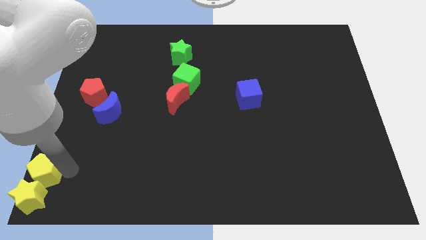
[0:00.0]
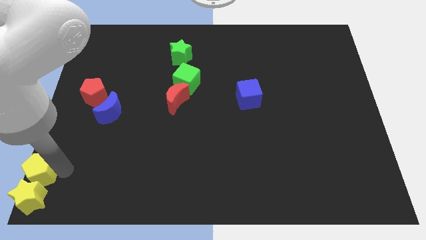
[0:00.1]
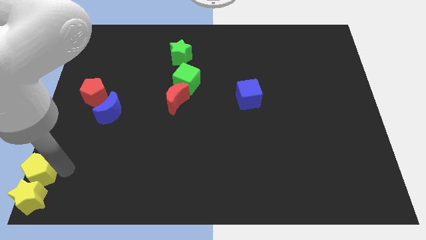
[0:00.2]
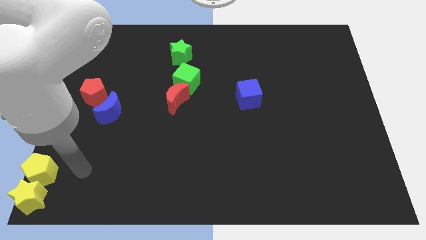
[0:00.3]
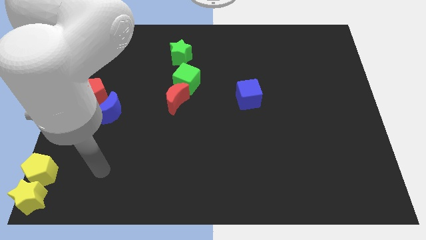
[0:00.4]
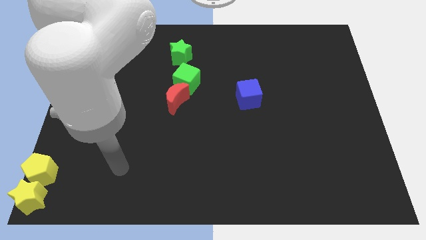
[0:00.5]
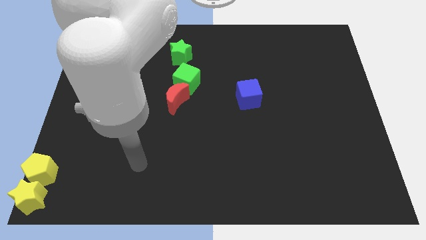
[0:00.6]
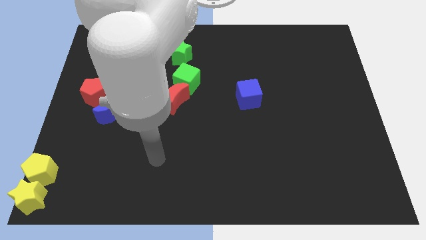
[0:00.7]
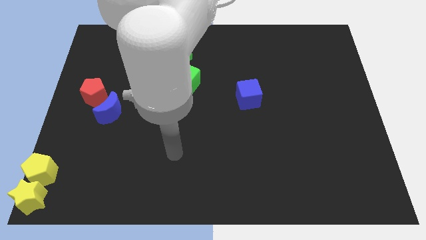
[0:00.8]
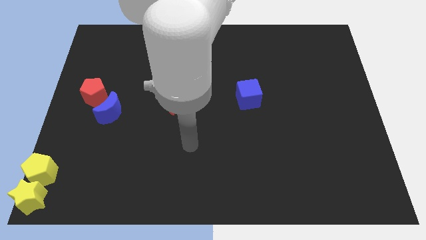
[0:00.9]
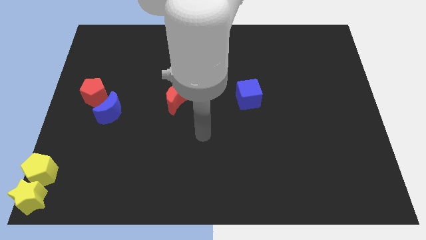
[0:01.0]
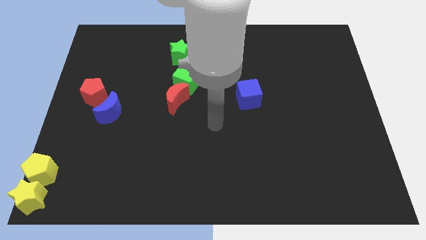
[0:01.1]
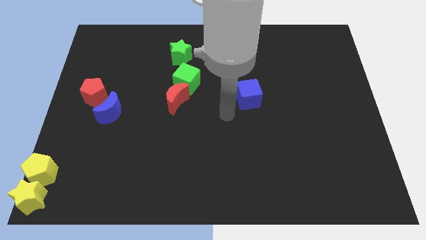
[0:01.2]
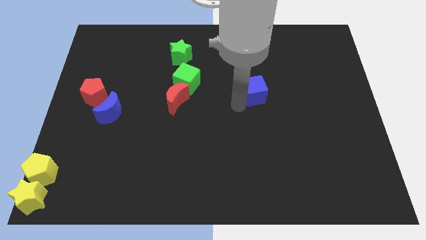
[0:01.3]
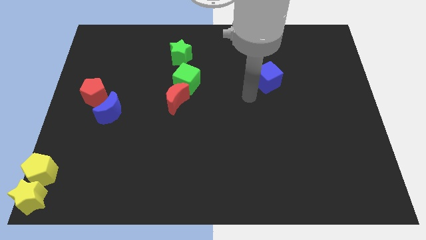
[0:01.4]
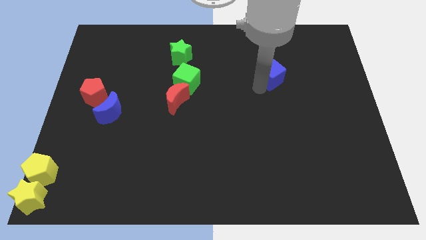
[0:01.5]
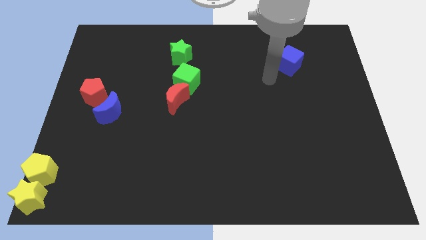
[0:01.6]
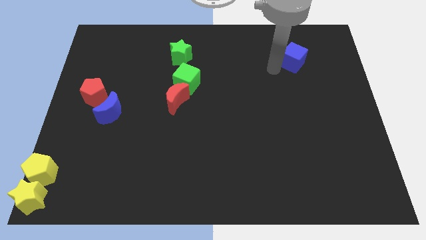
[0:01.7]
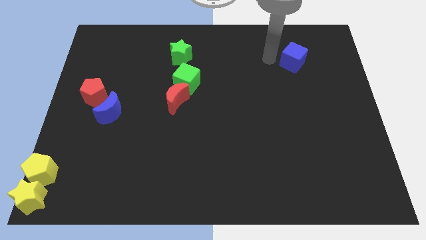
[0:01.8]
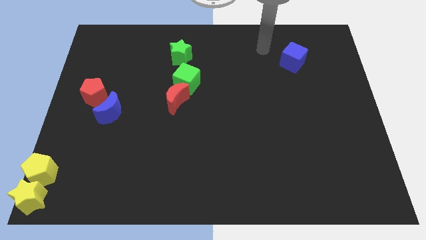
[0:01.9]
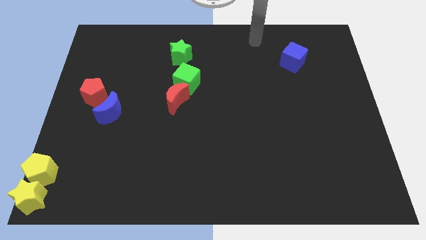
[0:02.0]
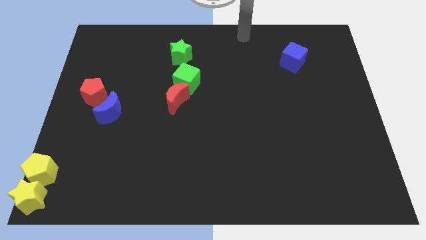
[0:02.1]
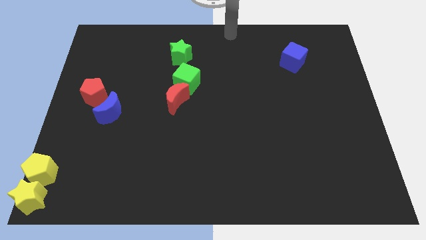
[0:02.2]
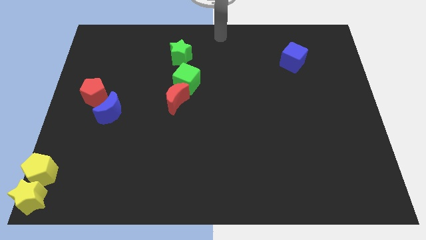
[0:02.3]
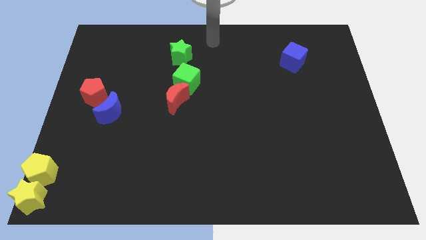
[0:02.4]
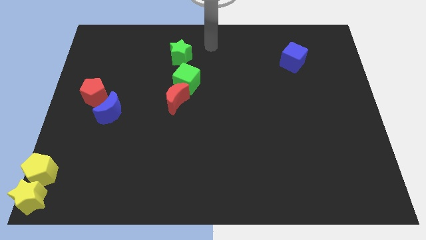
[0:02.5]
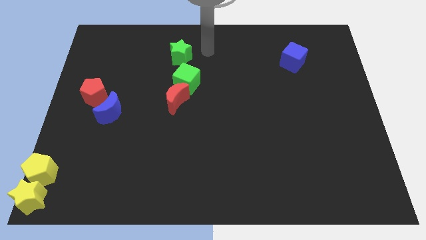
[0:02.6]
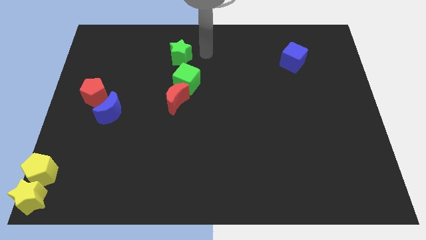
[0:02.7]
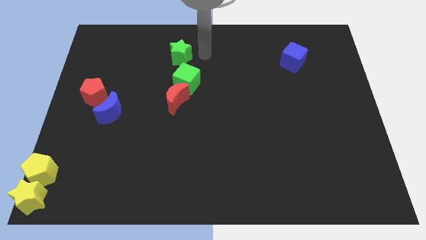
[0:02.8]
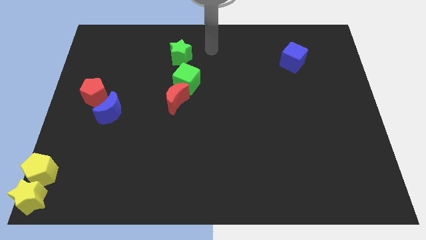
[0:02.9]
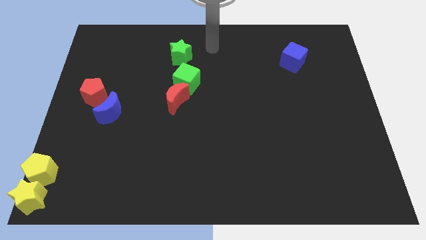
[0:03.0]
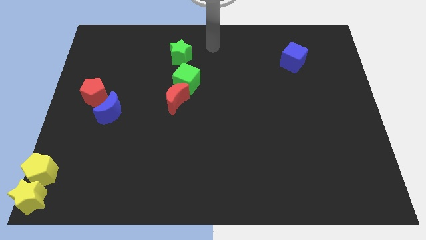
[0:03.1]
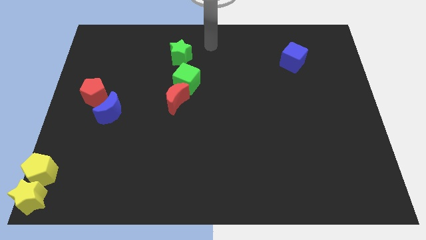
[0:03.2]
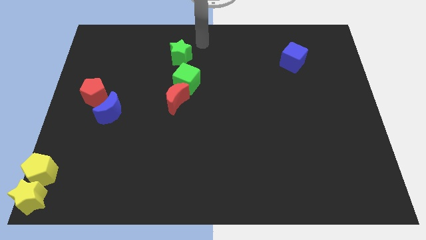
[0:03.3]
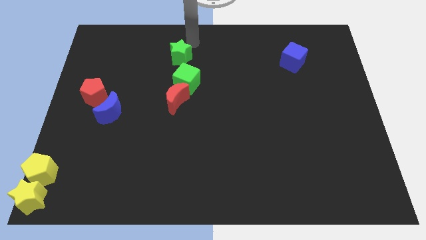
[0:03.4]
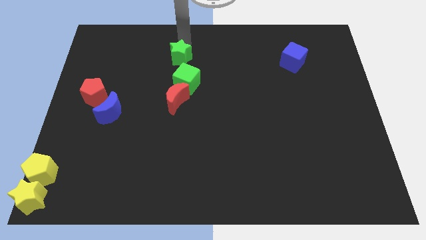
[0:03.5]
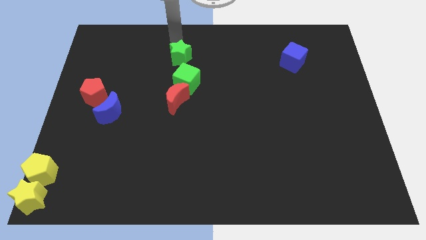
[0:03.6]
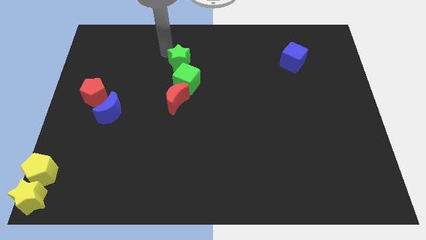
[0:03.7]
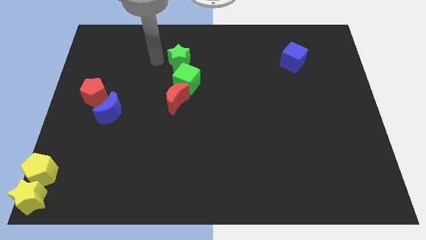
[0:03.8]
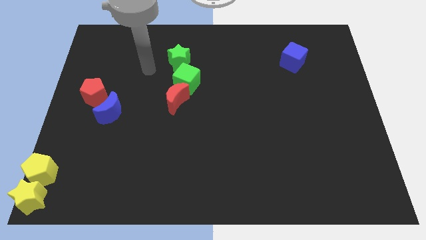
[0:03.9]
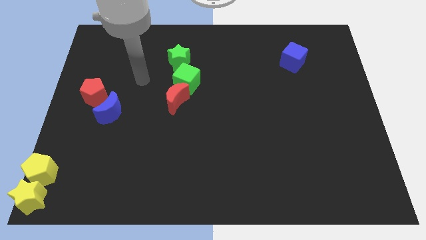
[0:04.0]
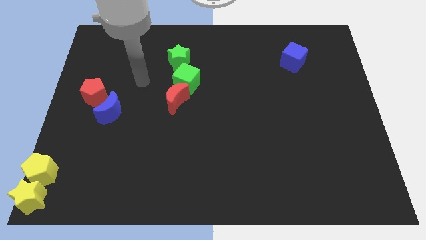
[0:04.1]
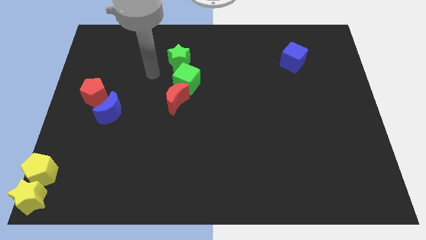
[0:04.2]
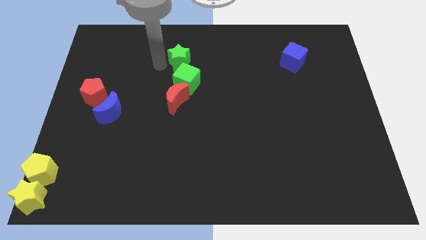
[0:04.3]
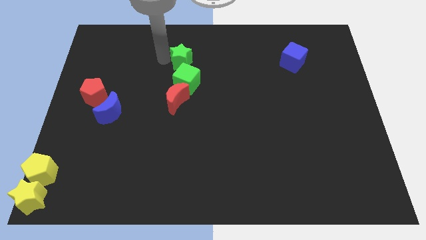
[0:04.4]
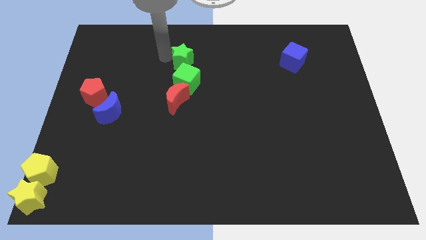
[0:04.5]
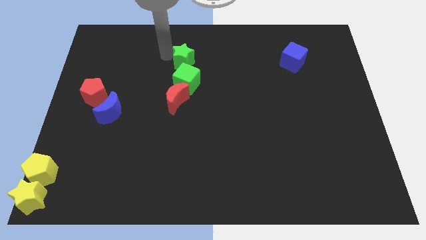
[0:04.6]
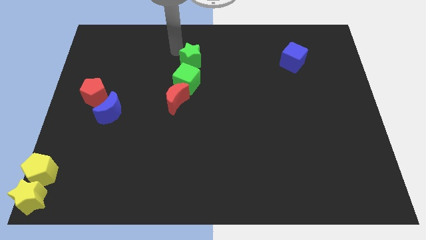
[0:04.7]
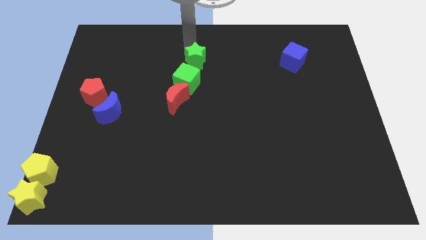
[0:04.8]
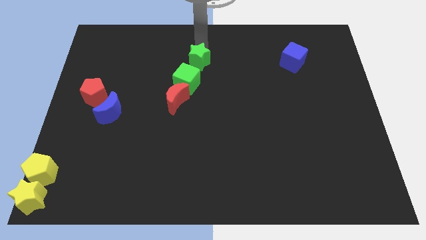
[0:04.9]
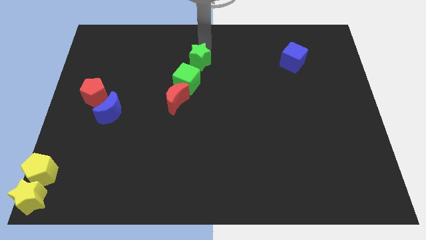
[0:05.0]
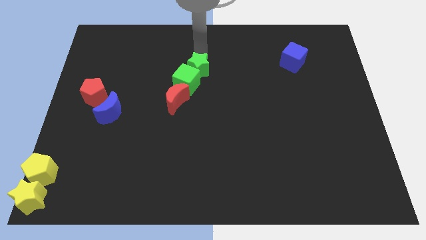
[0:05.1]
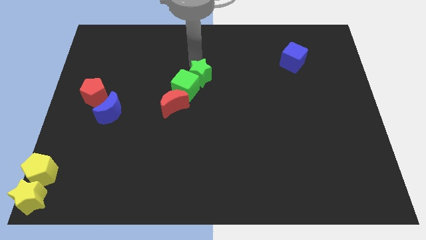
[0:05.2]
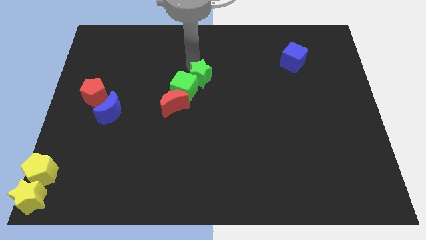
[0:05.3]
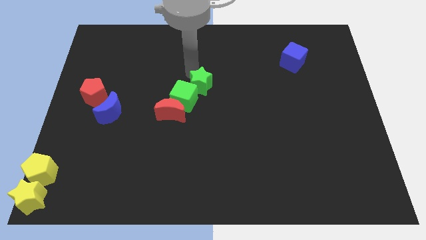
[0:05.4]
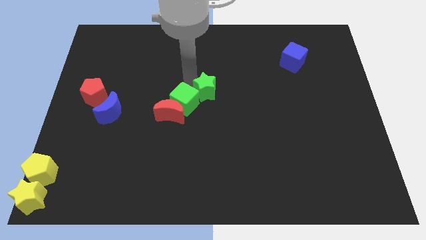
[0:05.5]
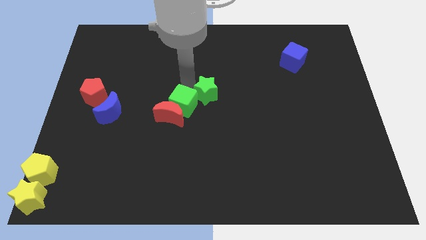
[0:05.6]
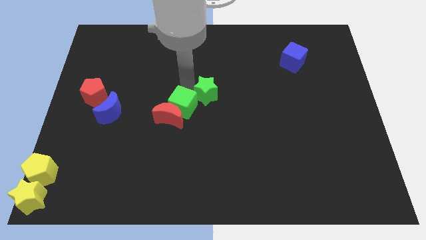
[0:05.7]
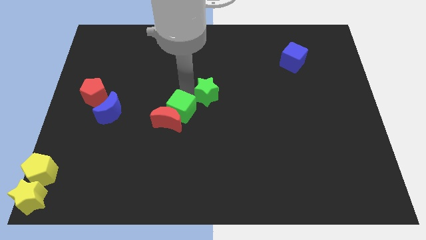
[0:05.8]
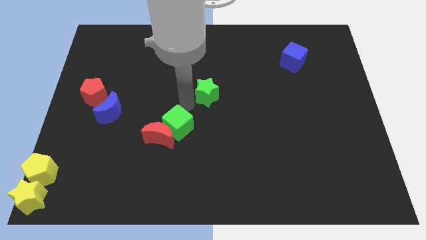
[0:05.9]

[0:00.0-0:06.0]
place your arm in between the green blocks

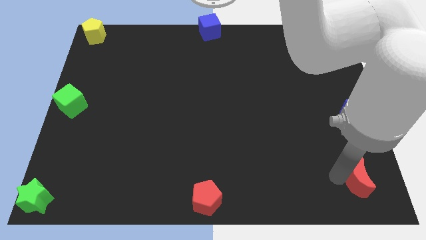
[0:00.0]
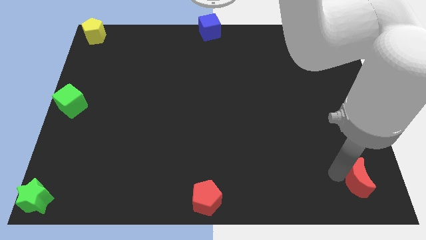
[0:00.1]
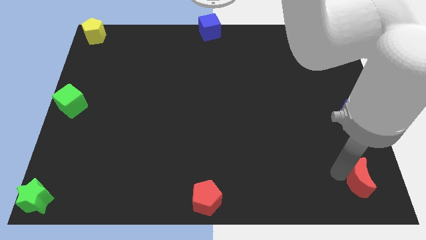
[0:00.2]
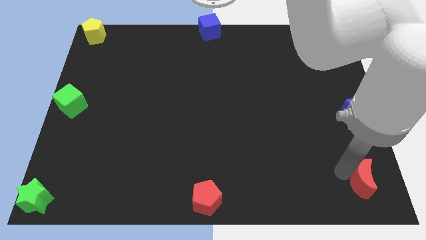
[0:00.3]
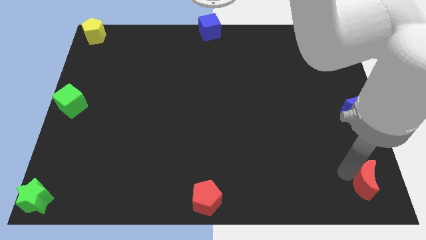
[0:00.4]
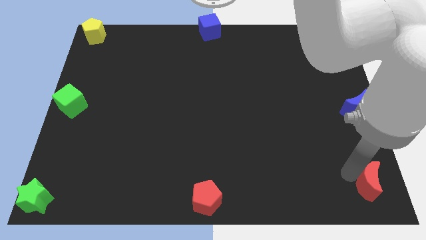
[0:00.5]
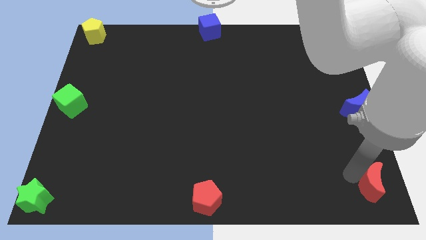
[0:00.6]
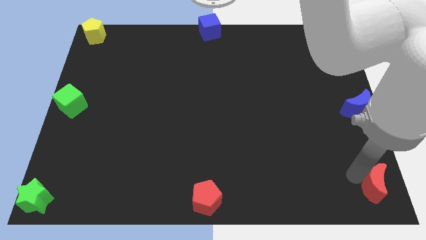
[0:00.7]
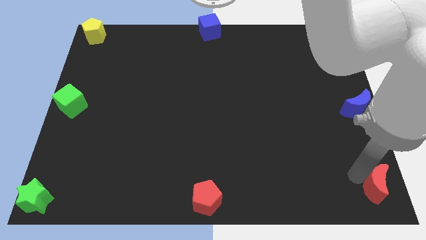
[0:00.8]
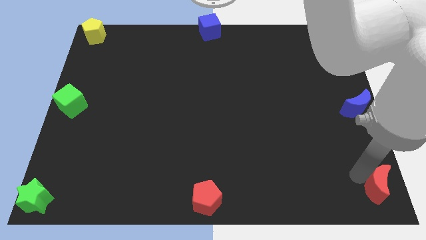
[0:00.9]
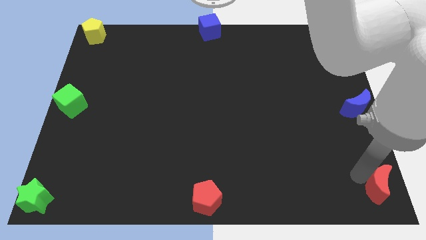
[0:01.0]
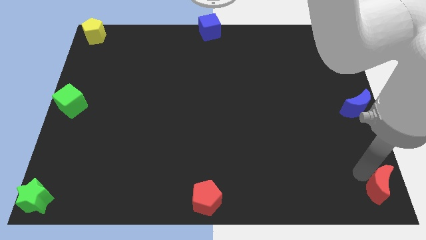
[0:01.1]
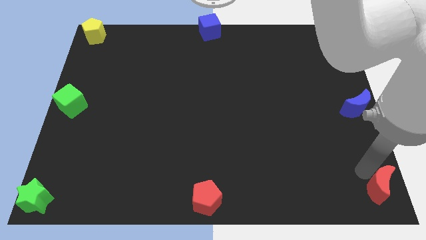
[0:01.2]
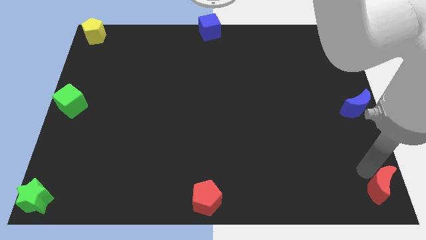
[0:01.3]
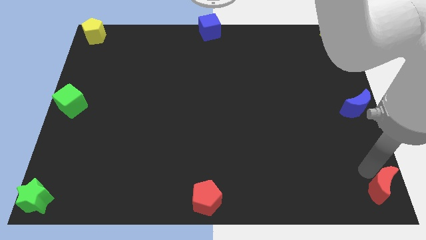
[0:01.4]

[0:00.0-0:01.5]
push the red crescent to the bottom right of the board

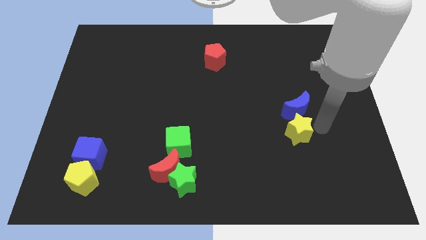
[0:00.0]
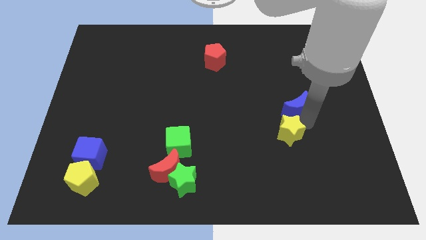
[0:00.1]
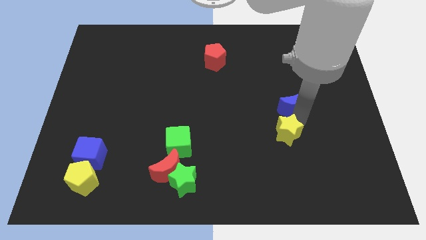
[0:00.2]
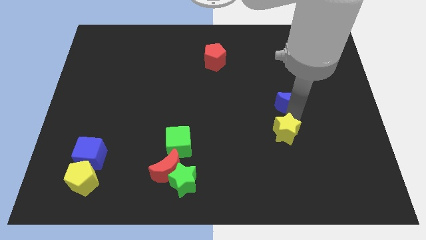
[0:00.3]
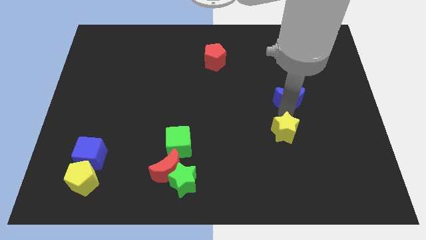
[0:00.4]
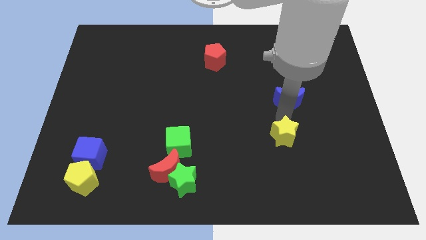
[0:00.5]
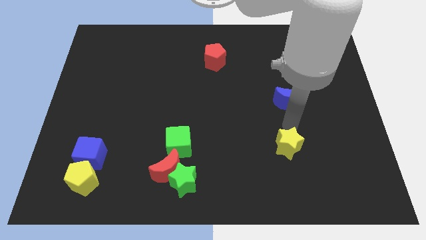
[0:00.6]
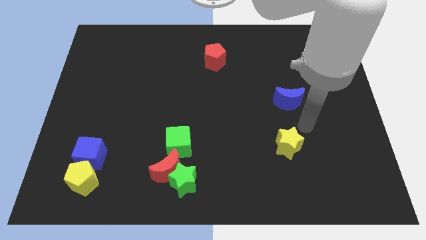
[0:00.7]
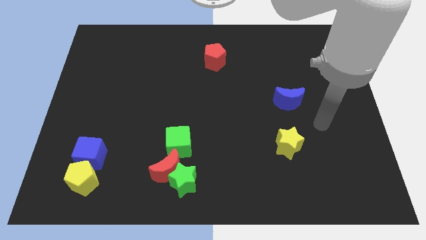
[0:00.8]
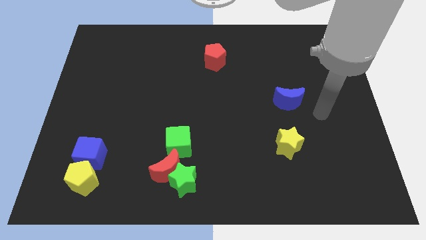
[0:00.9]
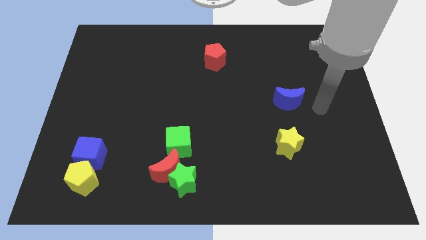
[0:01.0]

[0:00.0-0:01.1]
separate yellow star from blue moon

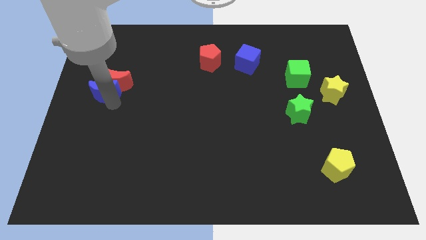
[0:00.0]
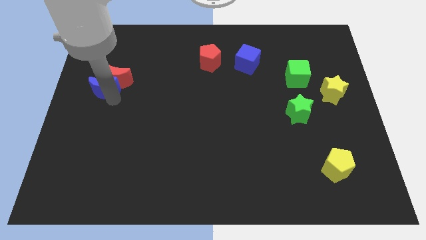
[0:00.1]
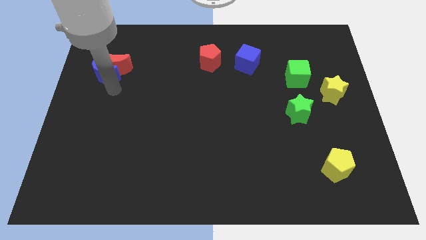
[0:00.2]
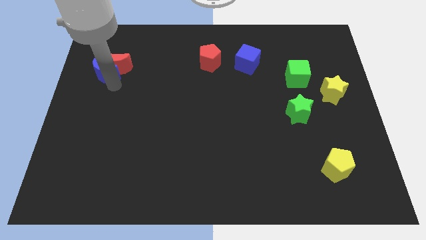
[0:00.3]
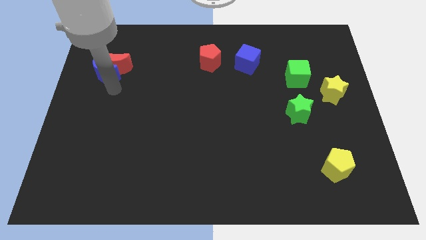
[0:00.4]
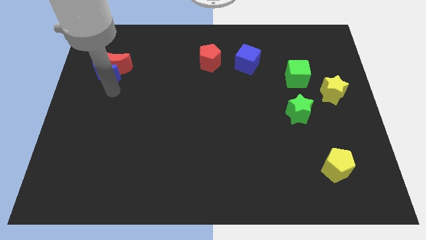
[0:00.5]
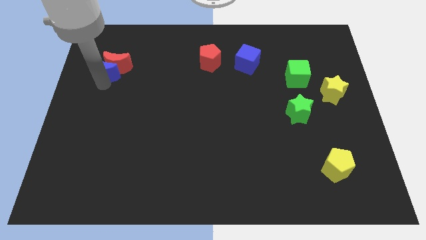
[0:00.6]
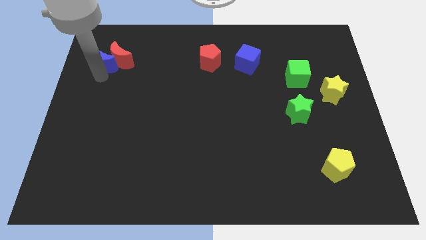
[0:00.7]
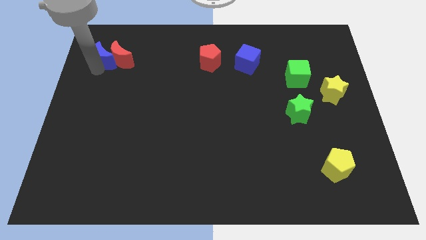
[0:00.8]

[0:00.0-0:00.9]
push red moon and blue moon upwards
